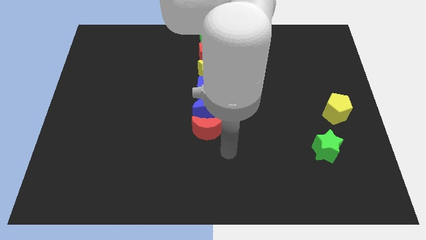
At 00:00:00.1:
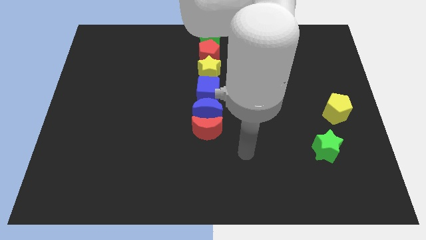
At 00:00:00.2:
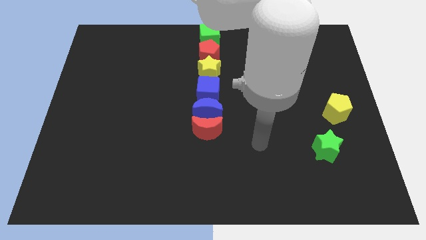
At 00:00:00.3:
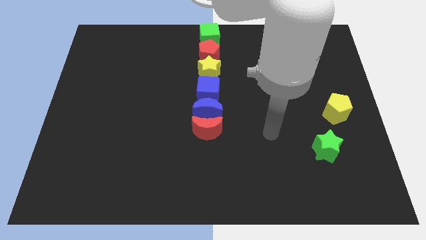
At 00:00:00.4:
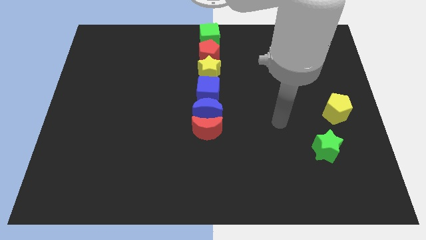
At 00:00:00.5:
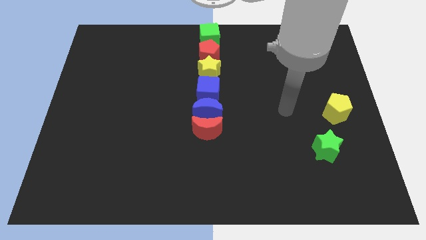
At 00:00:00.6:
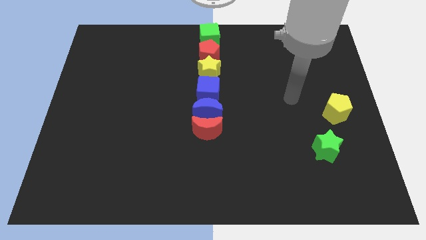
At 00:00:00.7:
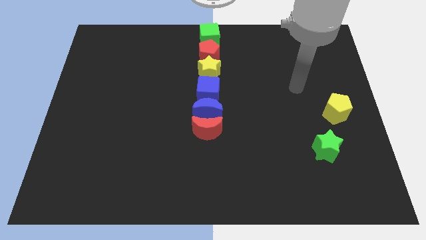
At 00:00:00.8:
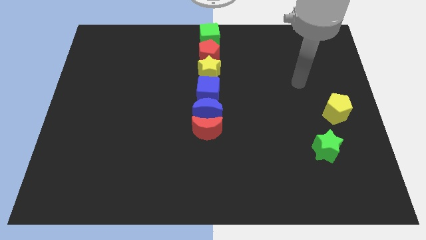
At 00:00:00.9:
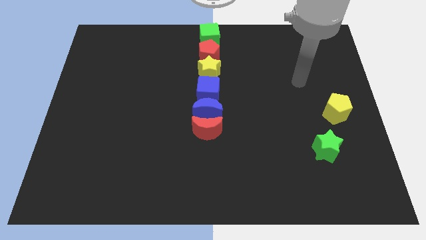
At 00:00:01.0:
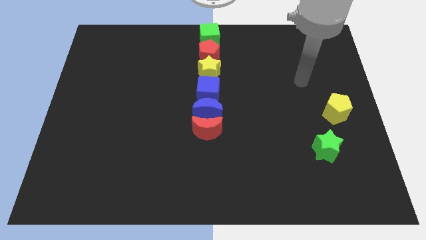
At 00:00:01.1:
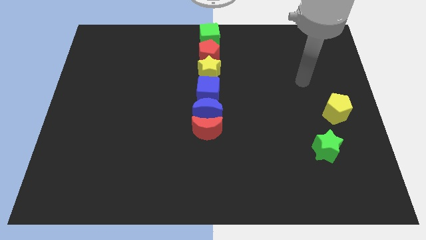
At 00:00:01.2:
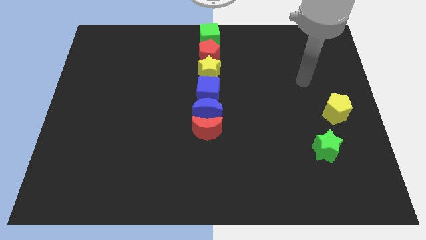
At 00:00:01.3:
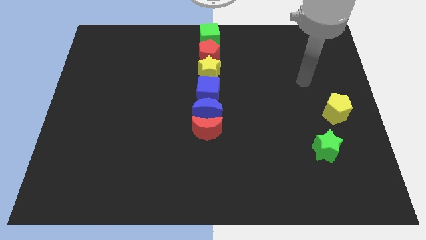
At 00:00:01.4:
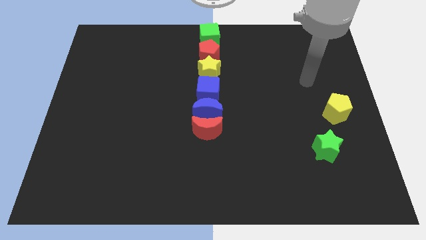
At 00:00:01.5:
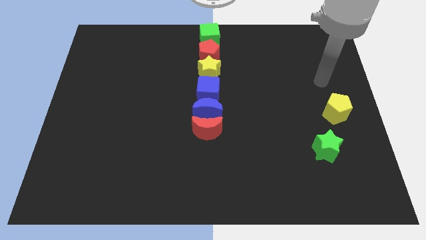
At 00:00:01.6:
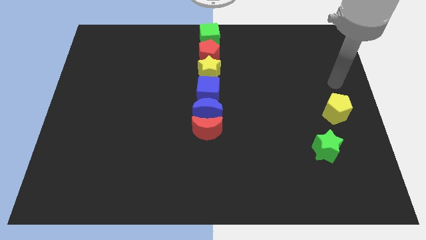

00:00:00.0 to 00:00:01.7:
move away from the red moon

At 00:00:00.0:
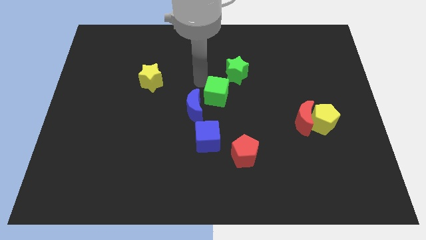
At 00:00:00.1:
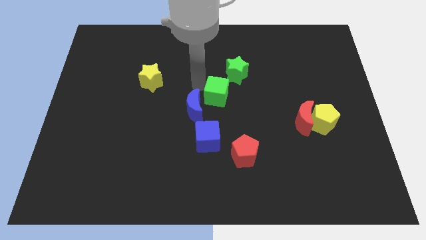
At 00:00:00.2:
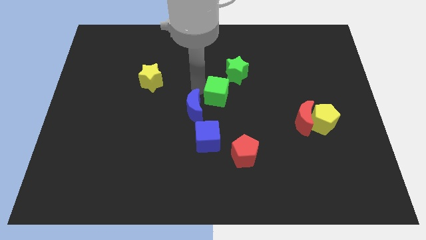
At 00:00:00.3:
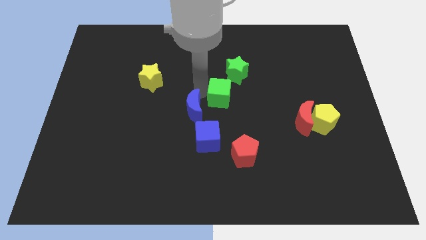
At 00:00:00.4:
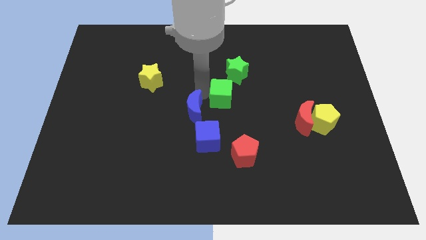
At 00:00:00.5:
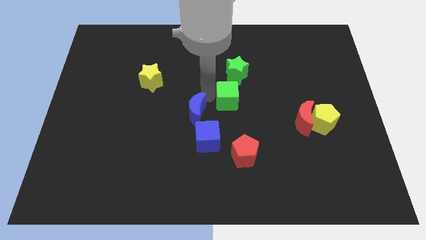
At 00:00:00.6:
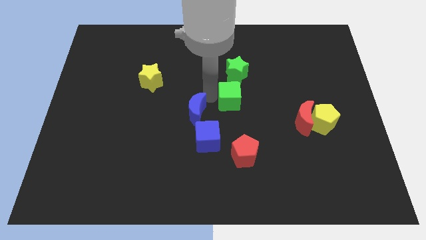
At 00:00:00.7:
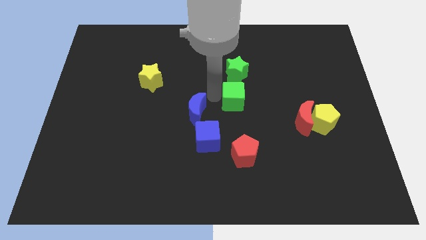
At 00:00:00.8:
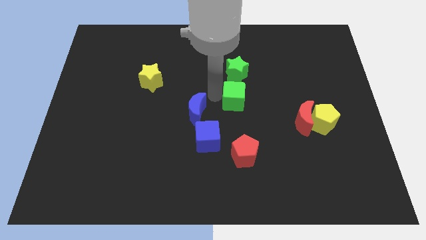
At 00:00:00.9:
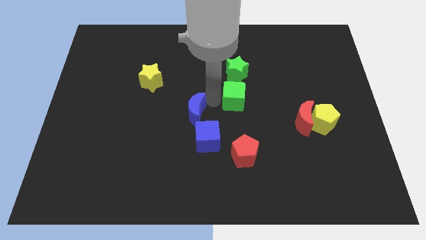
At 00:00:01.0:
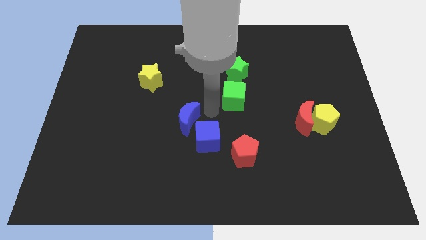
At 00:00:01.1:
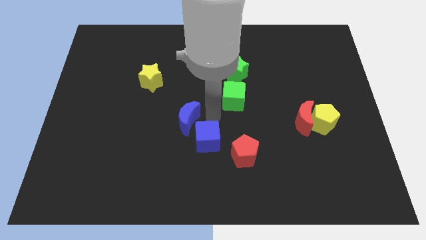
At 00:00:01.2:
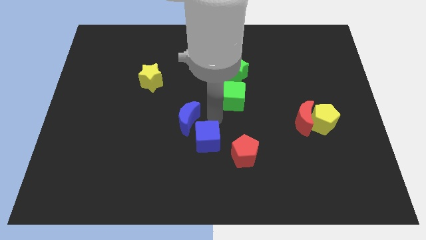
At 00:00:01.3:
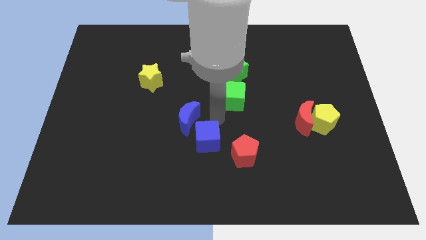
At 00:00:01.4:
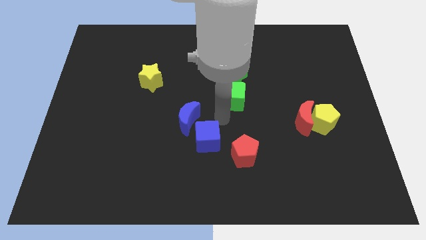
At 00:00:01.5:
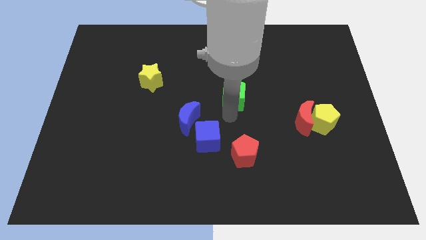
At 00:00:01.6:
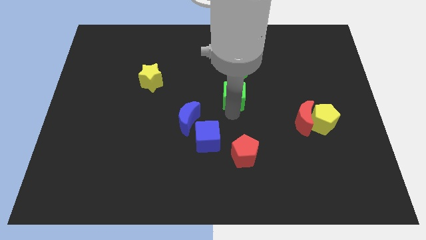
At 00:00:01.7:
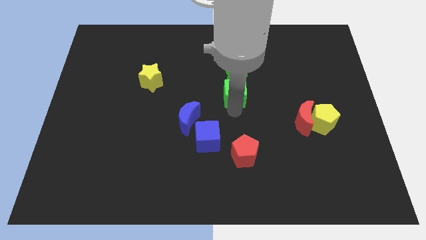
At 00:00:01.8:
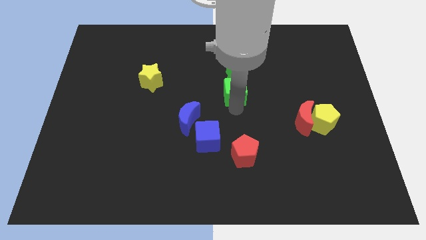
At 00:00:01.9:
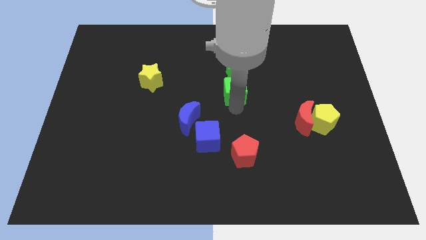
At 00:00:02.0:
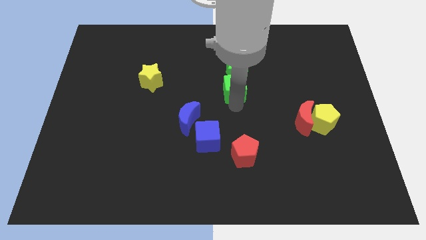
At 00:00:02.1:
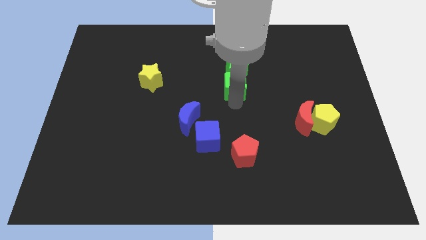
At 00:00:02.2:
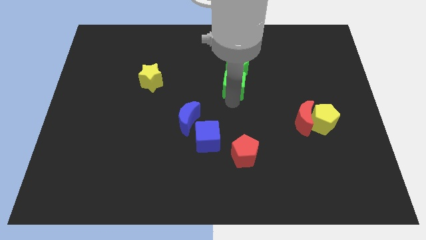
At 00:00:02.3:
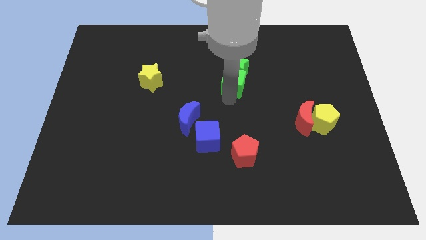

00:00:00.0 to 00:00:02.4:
push the green cube below green star

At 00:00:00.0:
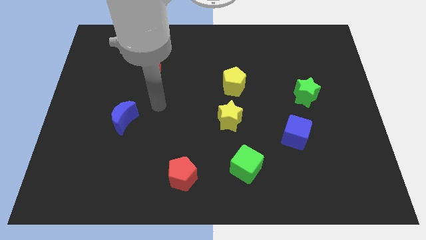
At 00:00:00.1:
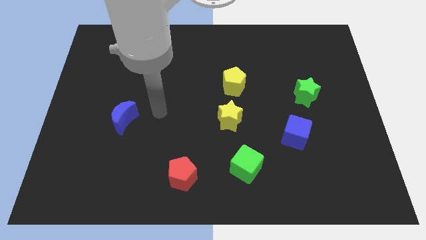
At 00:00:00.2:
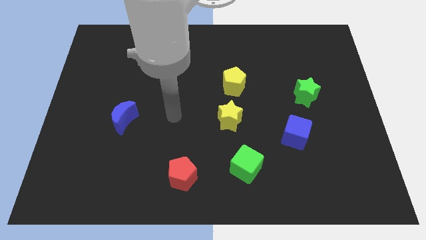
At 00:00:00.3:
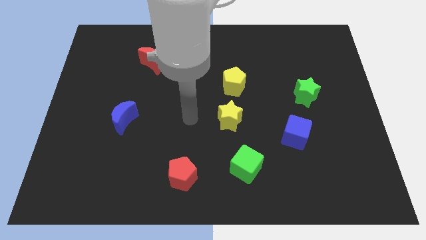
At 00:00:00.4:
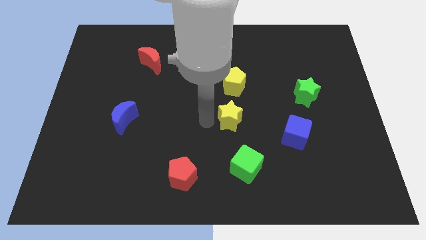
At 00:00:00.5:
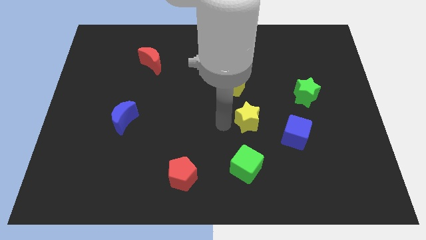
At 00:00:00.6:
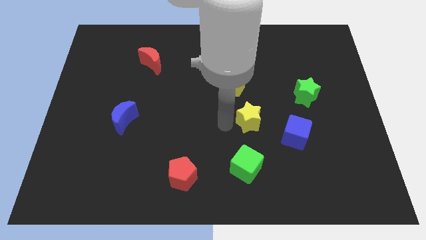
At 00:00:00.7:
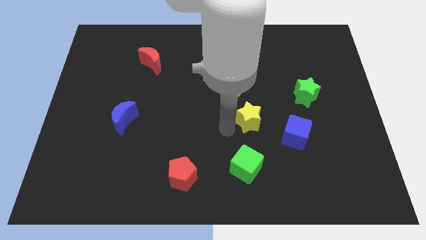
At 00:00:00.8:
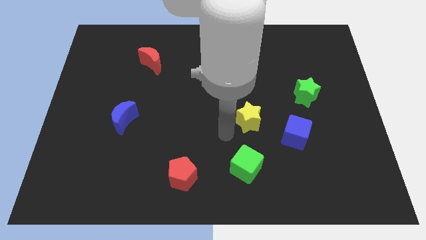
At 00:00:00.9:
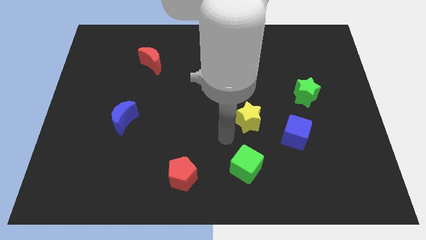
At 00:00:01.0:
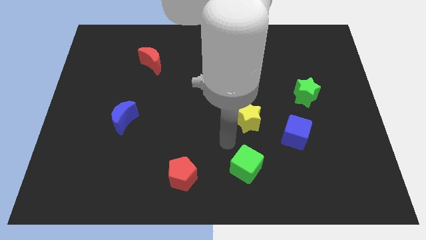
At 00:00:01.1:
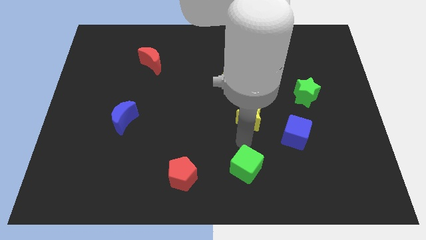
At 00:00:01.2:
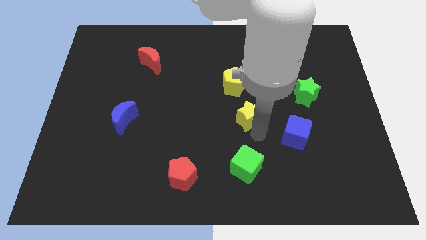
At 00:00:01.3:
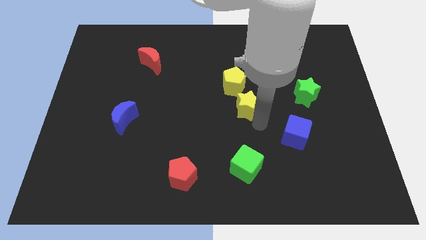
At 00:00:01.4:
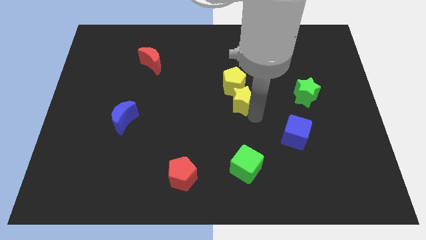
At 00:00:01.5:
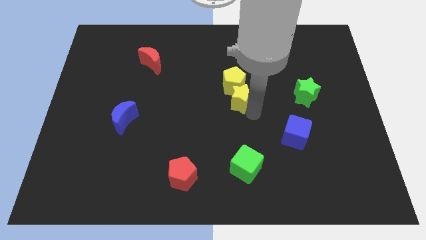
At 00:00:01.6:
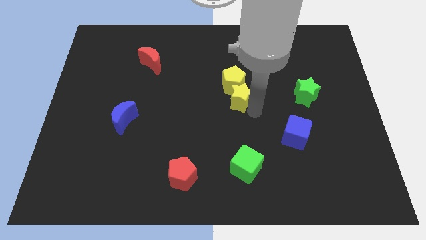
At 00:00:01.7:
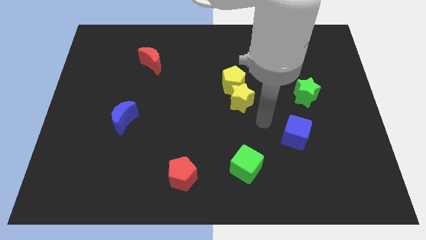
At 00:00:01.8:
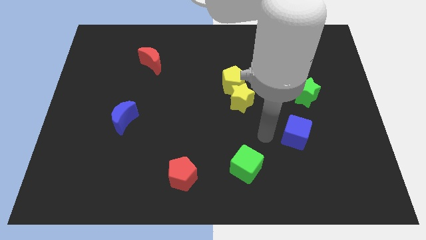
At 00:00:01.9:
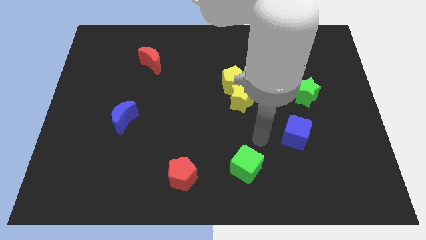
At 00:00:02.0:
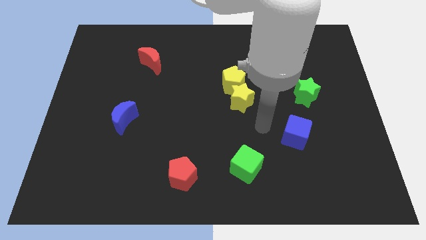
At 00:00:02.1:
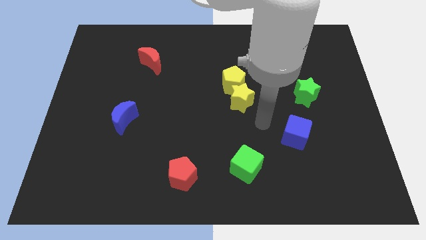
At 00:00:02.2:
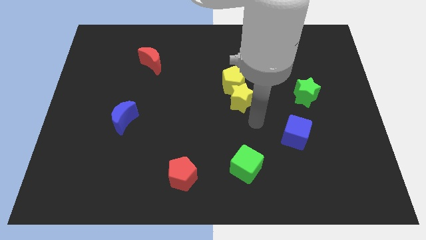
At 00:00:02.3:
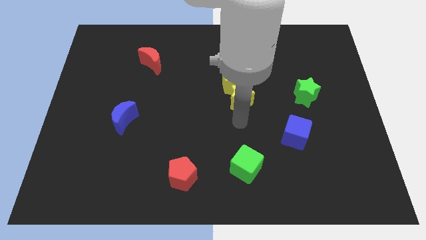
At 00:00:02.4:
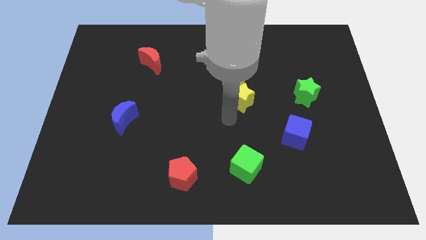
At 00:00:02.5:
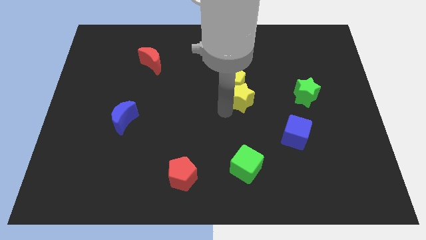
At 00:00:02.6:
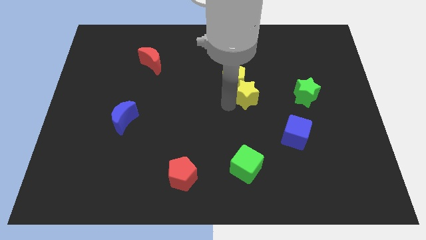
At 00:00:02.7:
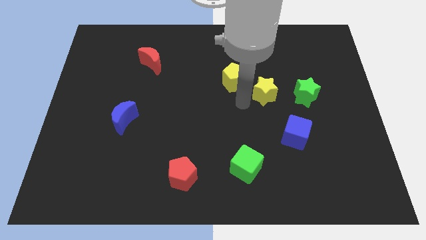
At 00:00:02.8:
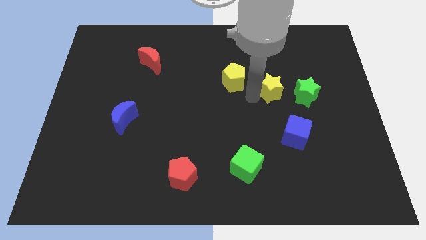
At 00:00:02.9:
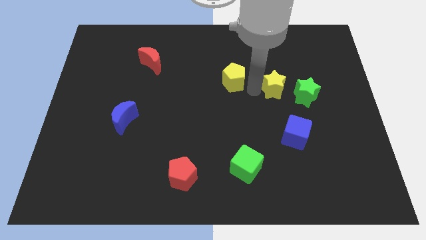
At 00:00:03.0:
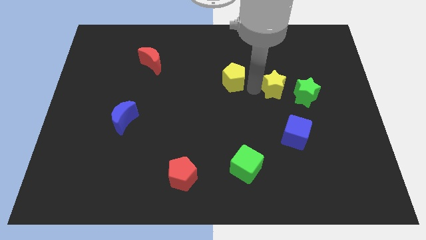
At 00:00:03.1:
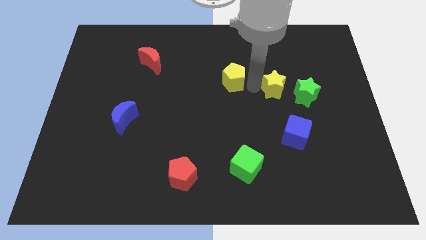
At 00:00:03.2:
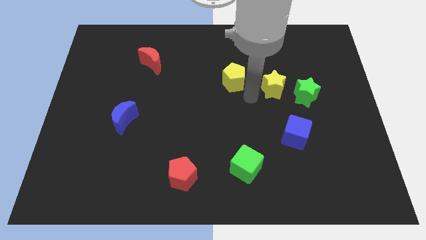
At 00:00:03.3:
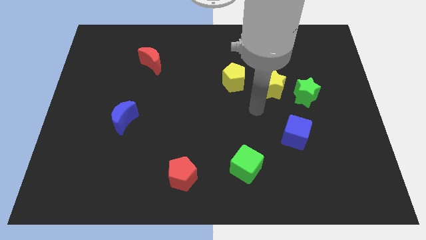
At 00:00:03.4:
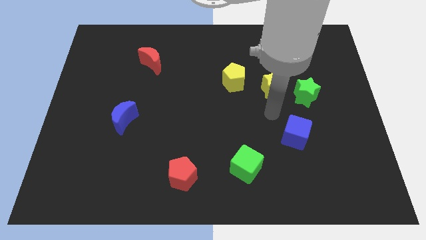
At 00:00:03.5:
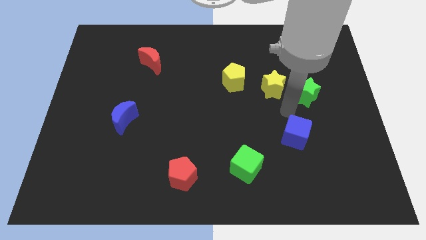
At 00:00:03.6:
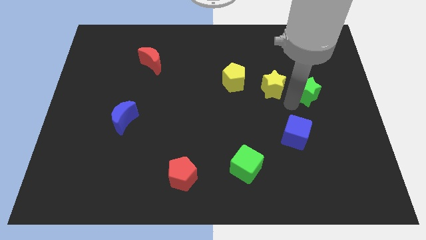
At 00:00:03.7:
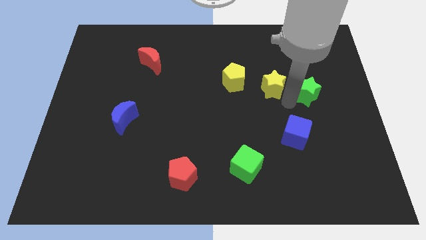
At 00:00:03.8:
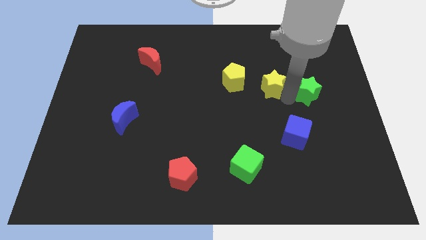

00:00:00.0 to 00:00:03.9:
place the yellow star diagonally in between the yellow pentagon and the green star

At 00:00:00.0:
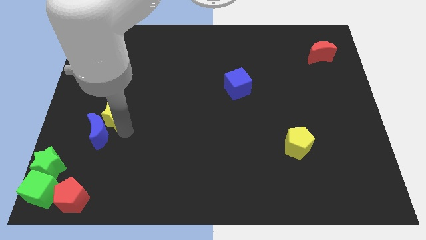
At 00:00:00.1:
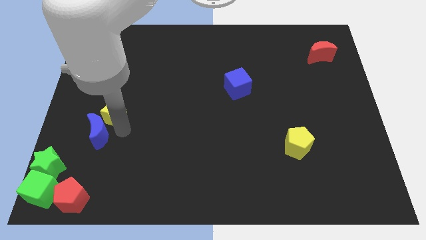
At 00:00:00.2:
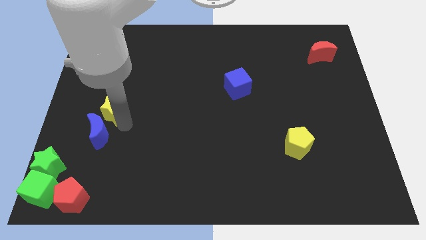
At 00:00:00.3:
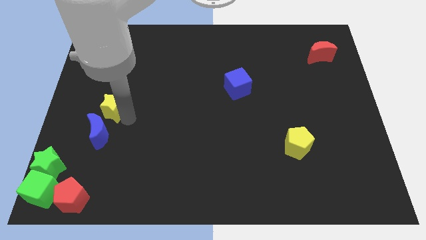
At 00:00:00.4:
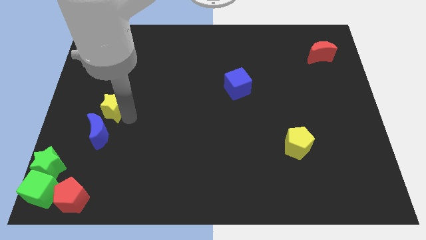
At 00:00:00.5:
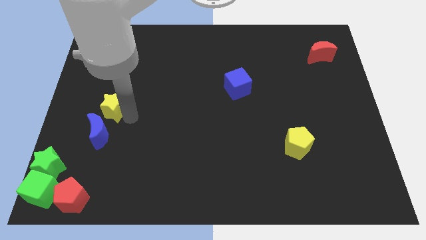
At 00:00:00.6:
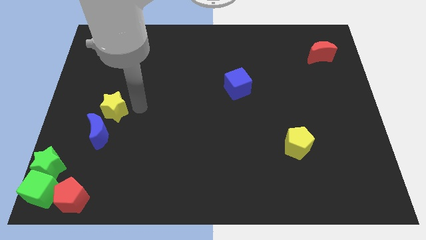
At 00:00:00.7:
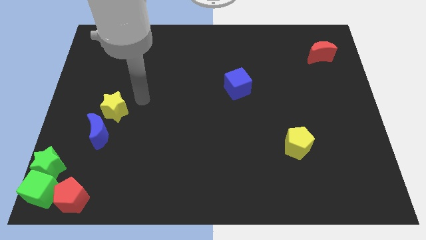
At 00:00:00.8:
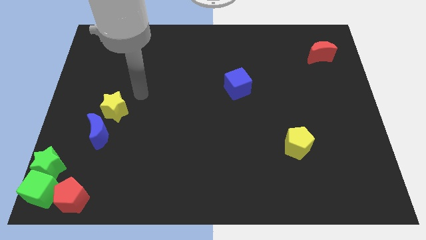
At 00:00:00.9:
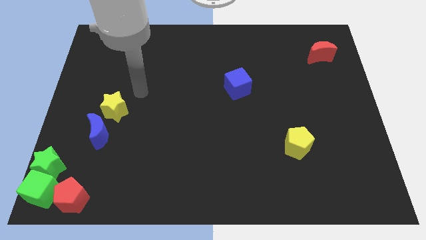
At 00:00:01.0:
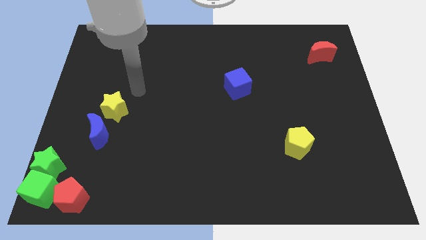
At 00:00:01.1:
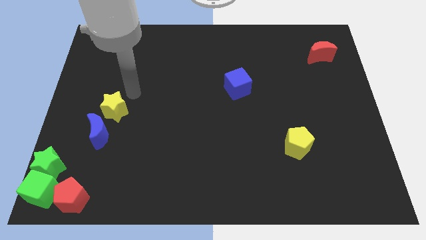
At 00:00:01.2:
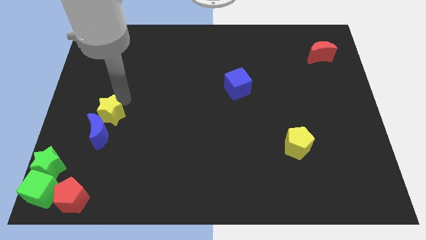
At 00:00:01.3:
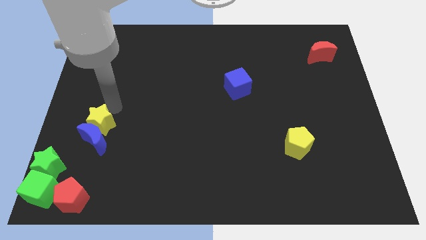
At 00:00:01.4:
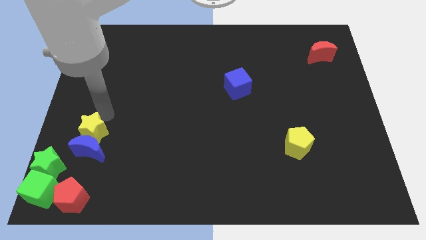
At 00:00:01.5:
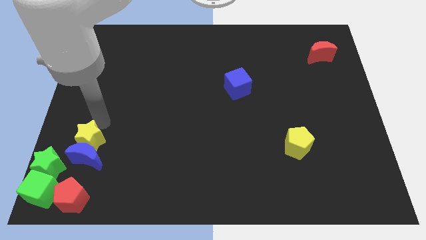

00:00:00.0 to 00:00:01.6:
place the yellow star vertically above the blue crescent
